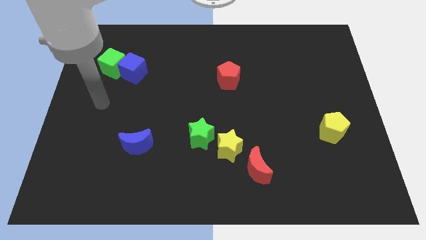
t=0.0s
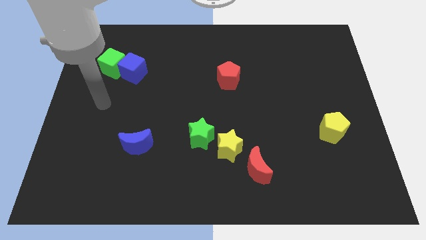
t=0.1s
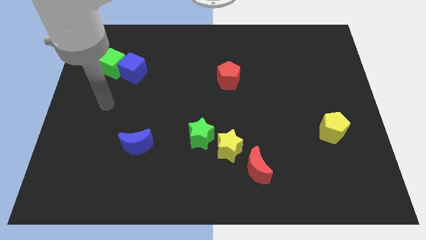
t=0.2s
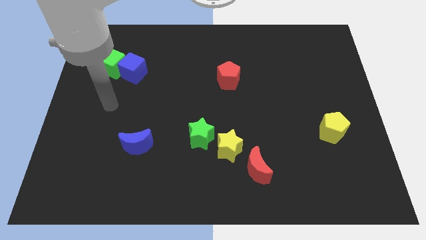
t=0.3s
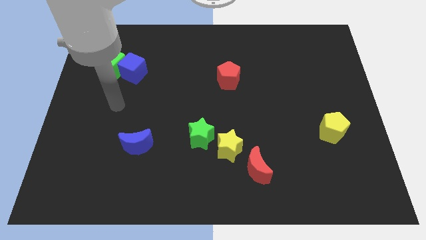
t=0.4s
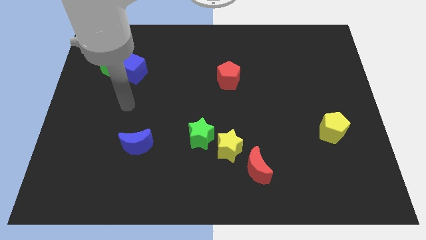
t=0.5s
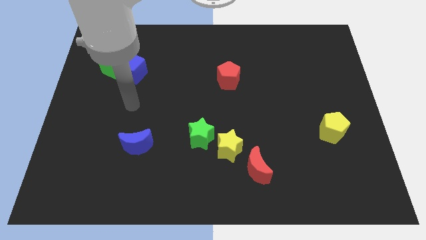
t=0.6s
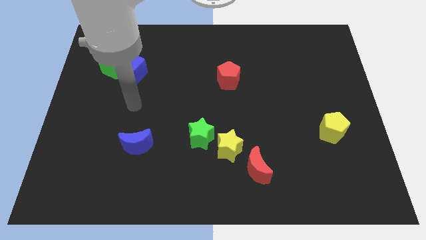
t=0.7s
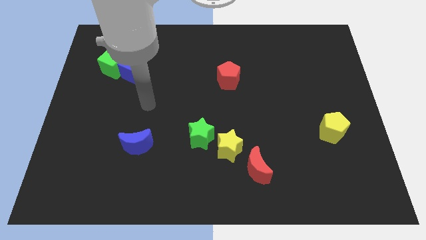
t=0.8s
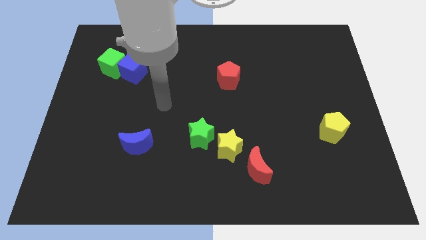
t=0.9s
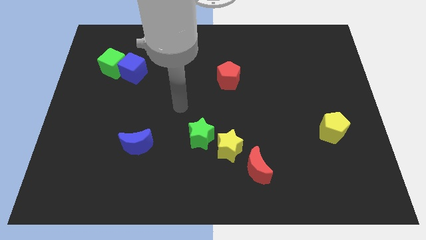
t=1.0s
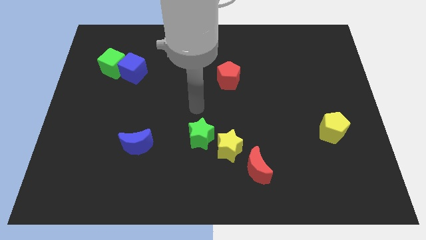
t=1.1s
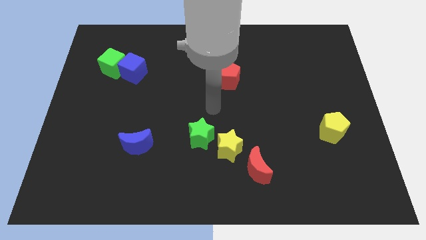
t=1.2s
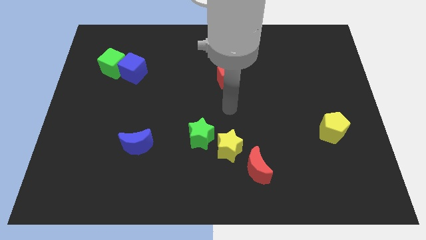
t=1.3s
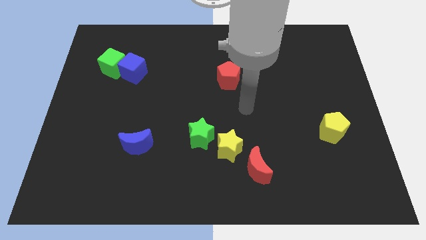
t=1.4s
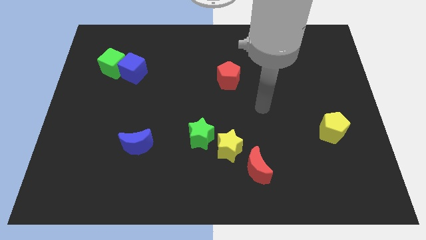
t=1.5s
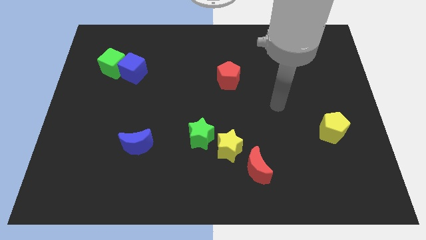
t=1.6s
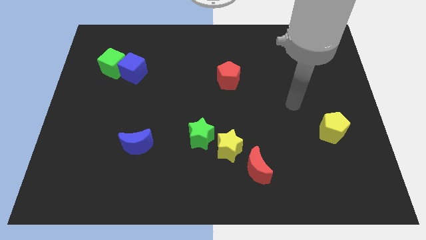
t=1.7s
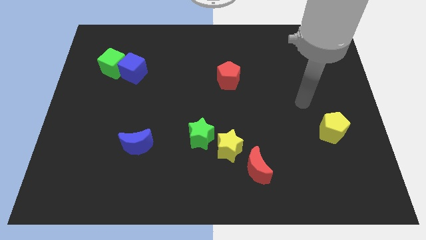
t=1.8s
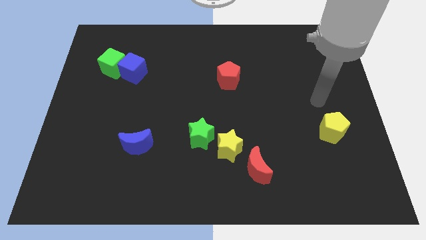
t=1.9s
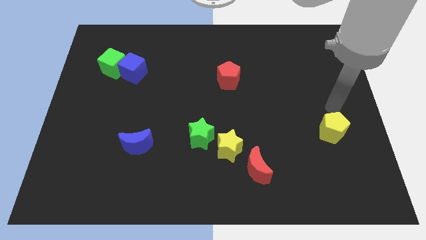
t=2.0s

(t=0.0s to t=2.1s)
slide your arm on top of yellow pentagon

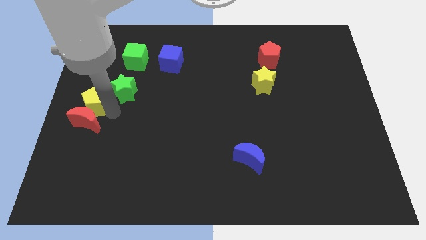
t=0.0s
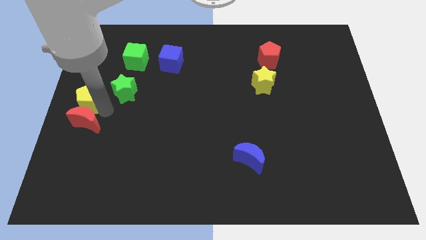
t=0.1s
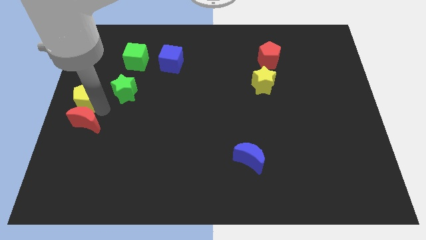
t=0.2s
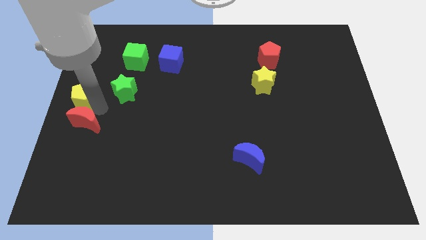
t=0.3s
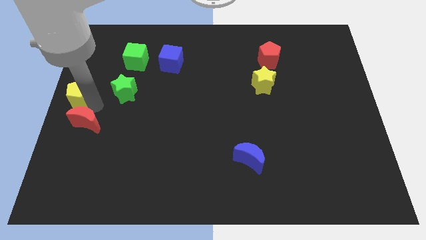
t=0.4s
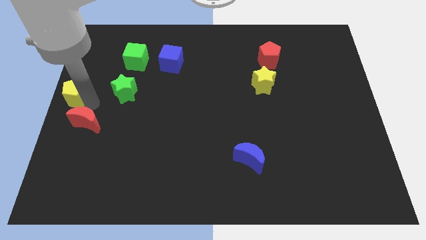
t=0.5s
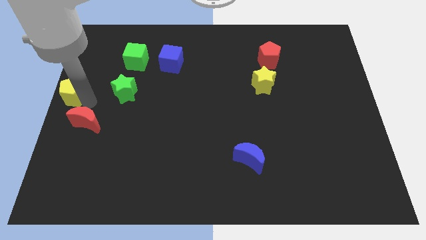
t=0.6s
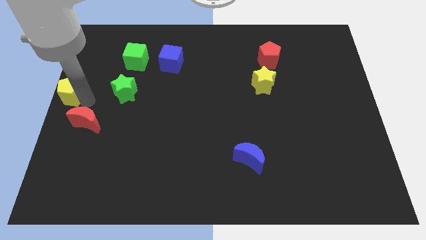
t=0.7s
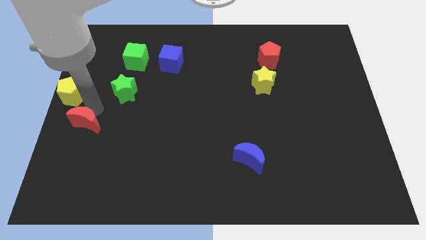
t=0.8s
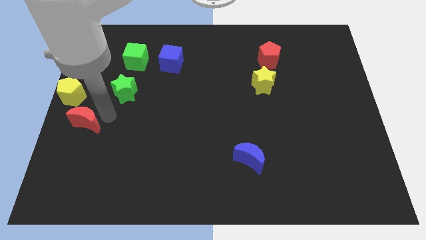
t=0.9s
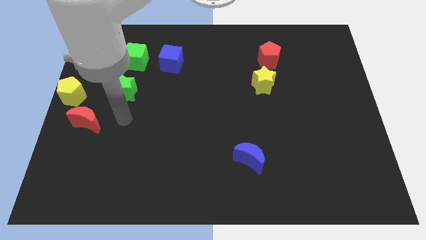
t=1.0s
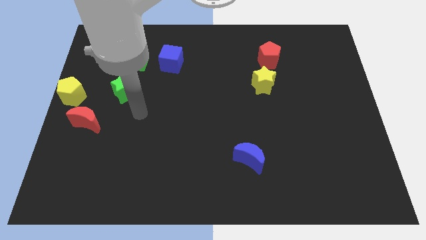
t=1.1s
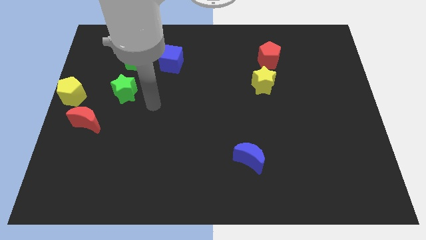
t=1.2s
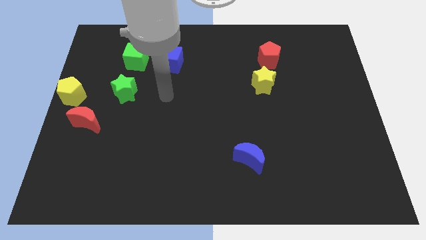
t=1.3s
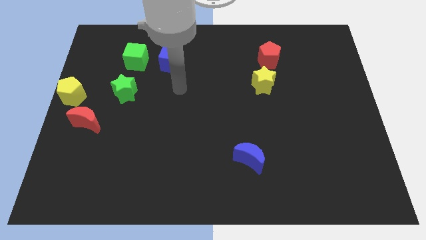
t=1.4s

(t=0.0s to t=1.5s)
push the yellow pentagon to the left center of the board

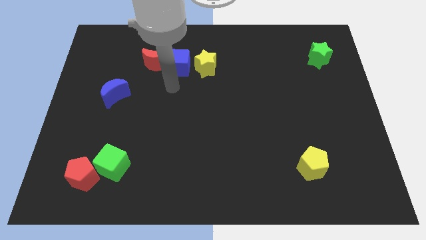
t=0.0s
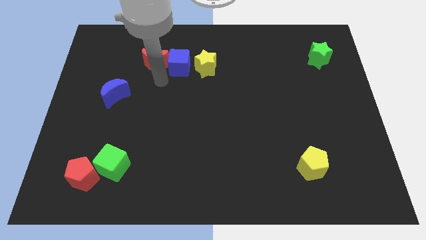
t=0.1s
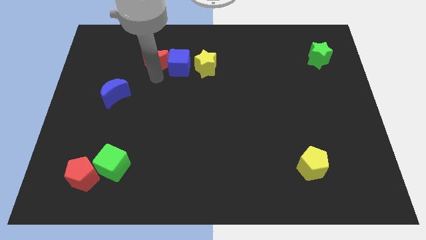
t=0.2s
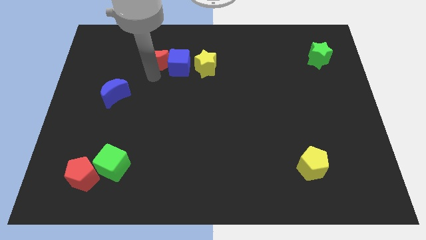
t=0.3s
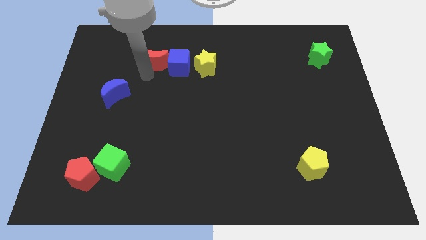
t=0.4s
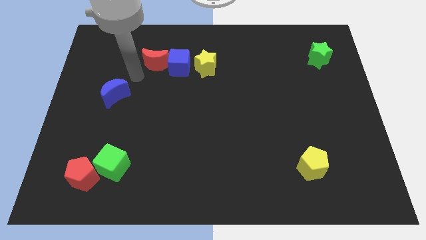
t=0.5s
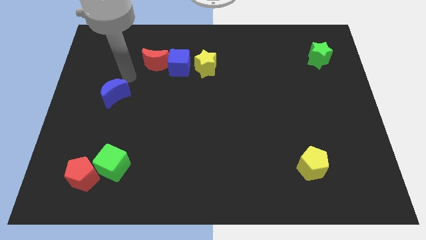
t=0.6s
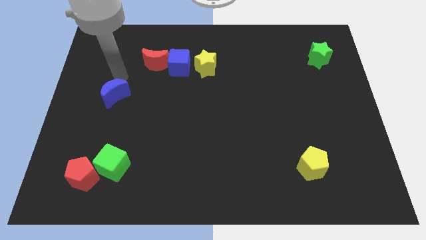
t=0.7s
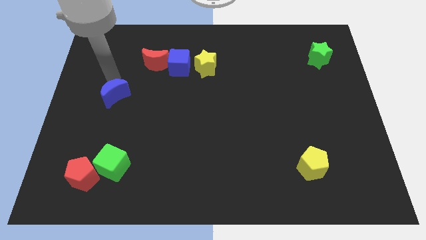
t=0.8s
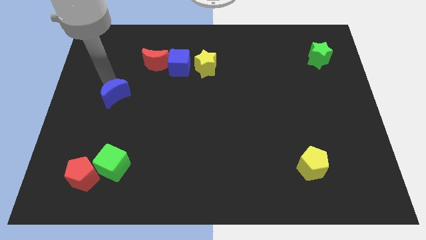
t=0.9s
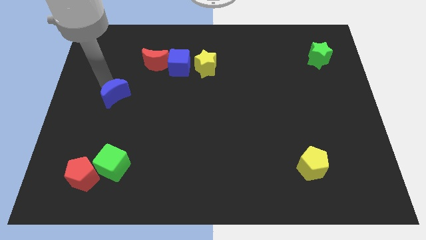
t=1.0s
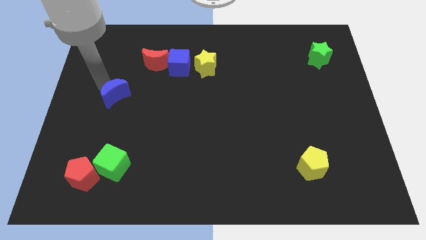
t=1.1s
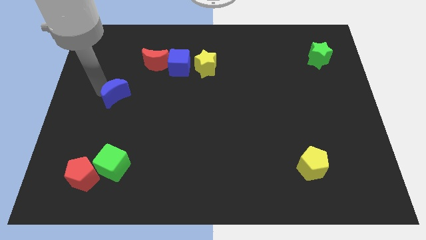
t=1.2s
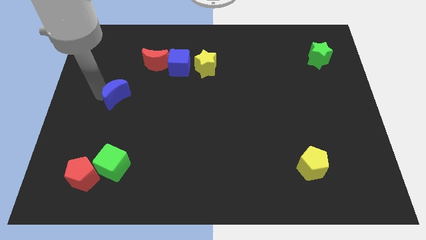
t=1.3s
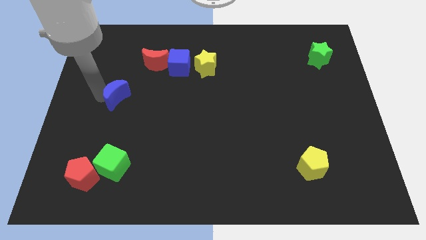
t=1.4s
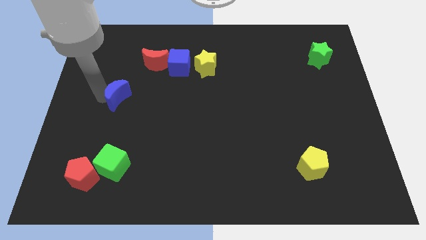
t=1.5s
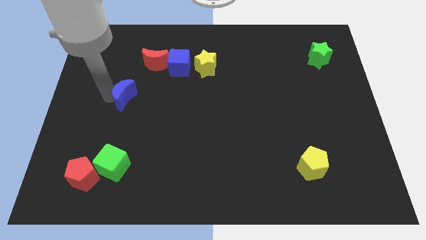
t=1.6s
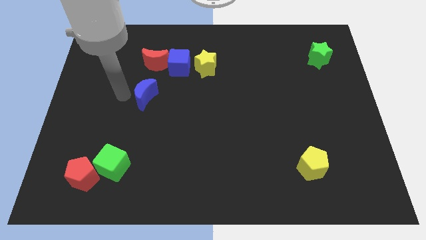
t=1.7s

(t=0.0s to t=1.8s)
move the blue crescent towards the right of the board

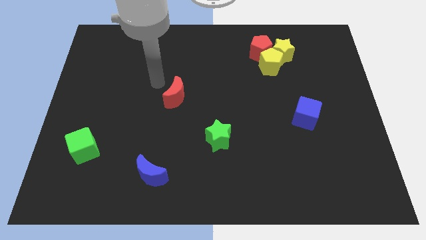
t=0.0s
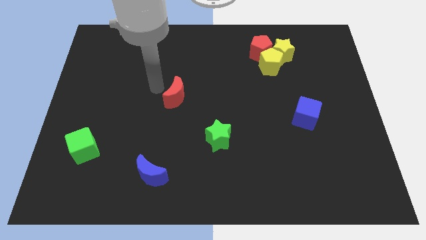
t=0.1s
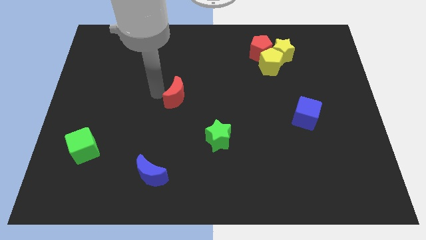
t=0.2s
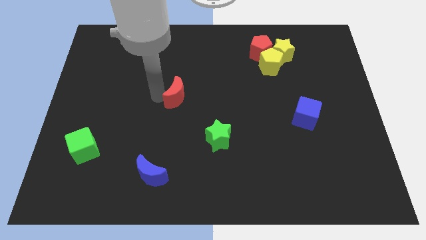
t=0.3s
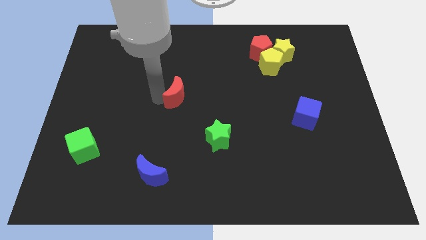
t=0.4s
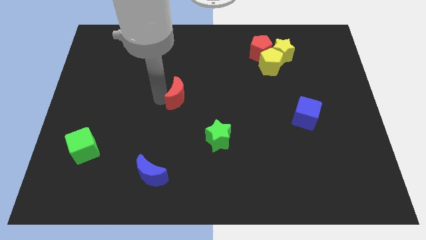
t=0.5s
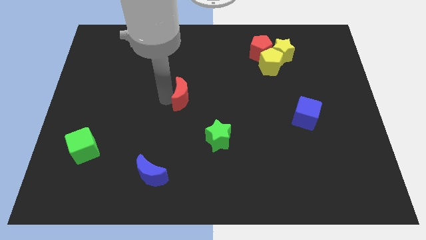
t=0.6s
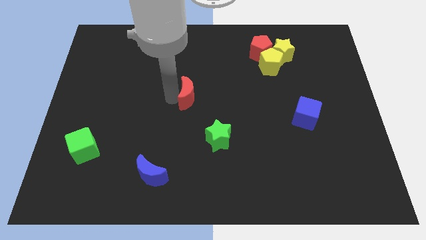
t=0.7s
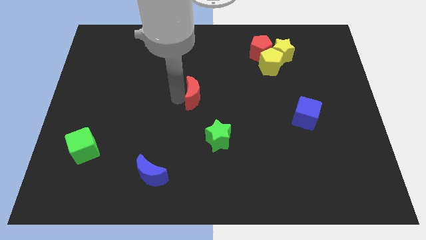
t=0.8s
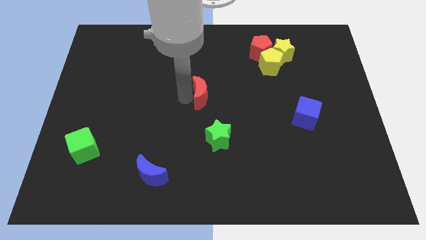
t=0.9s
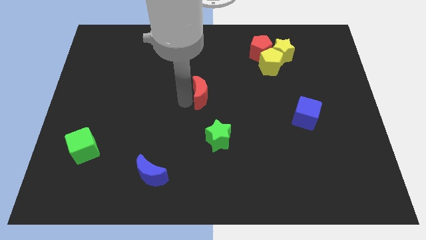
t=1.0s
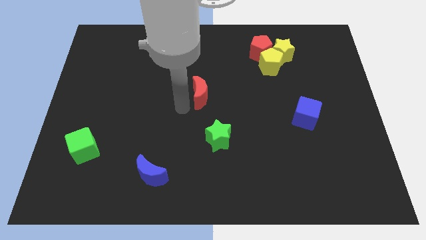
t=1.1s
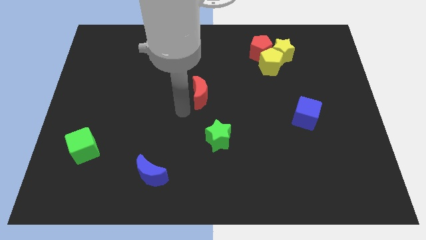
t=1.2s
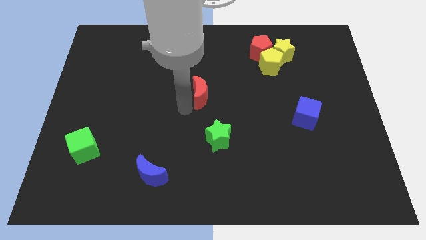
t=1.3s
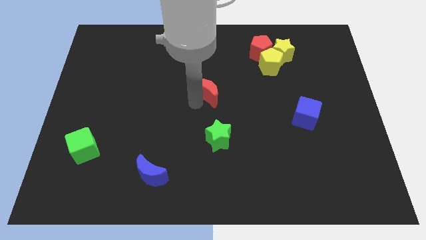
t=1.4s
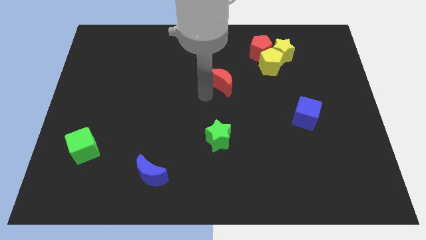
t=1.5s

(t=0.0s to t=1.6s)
place the red crescent above the green star

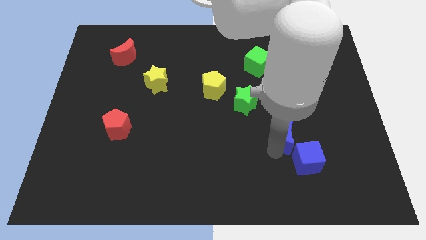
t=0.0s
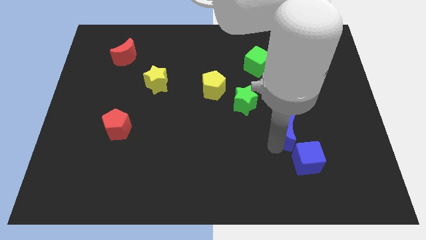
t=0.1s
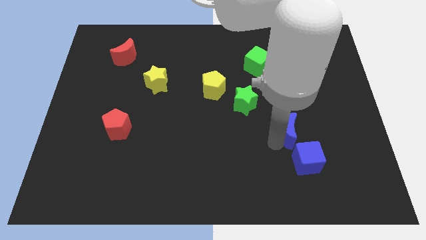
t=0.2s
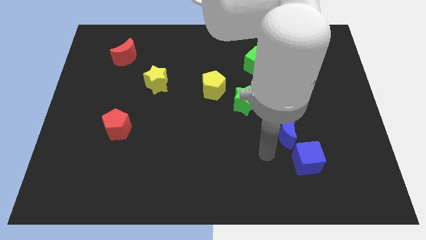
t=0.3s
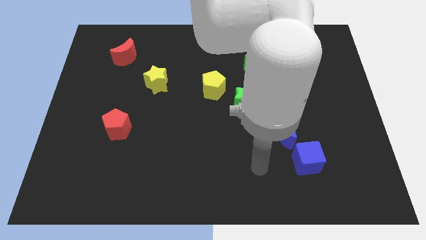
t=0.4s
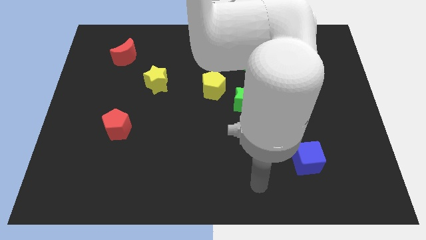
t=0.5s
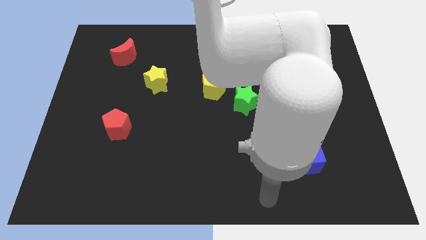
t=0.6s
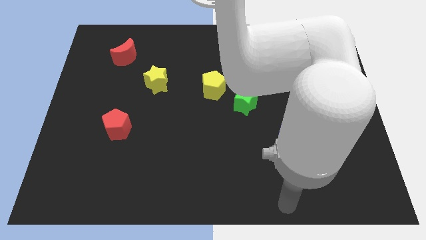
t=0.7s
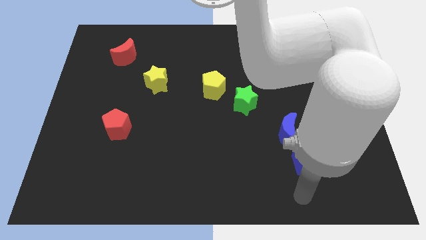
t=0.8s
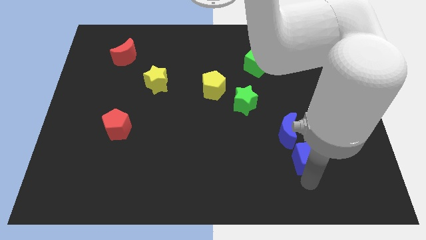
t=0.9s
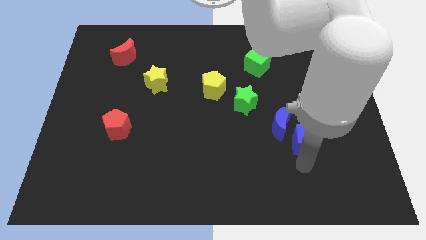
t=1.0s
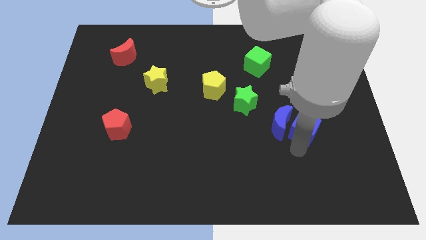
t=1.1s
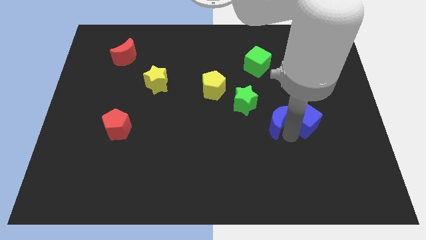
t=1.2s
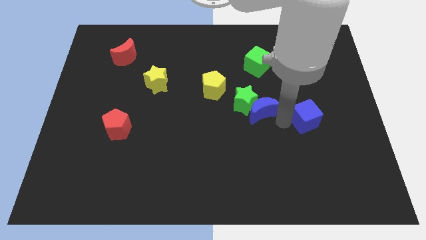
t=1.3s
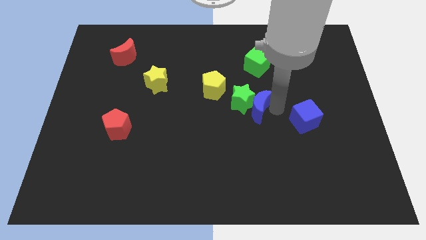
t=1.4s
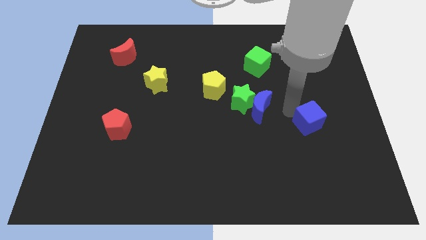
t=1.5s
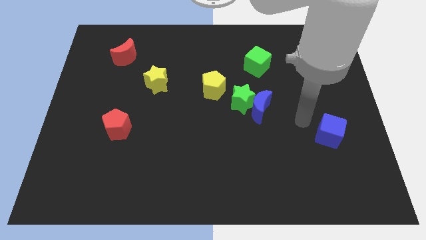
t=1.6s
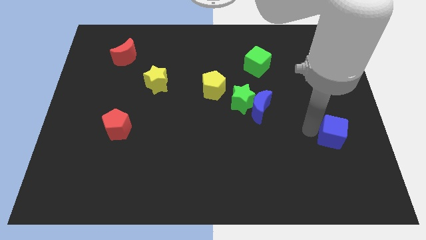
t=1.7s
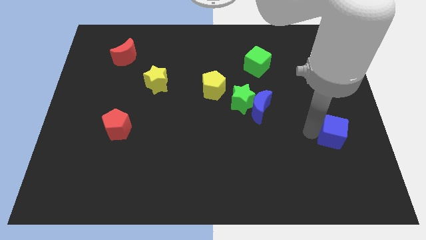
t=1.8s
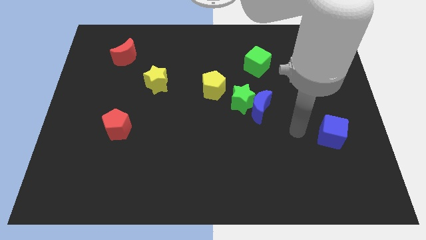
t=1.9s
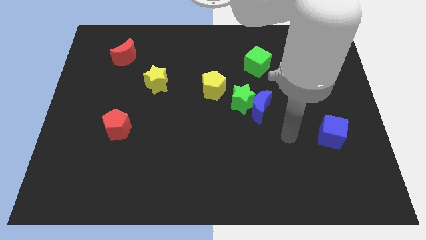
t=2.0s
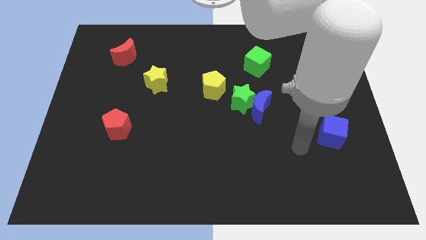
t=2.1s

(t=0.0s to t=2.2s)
separate the blue crescent and the blue cube
